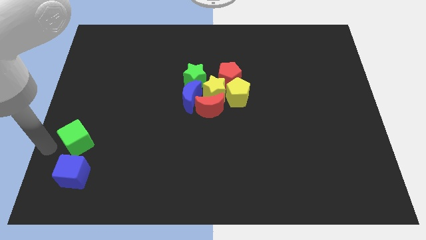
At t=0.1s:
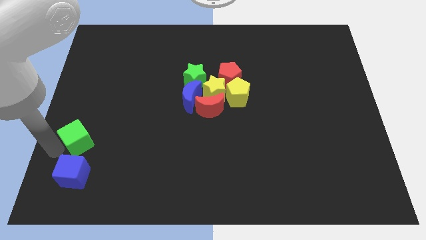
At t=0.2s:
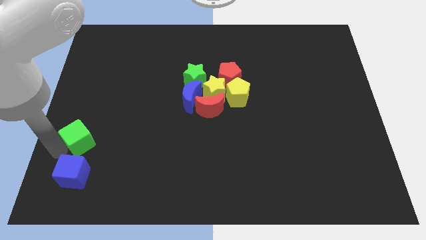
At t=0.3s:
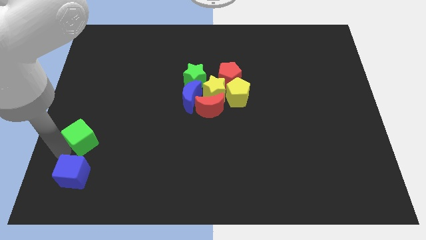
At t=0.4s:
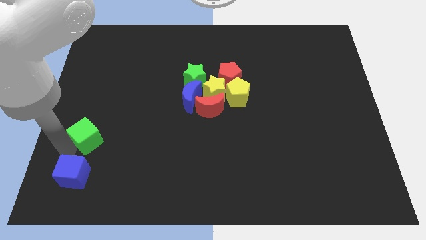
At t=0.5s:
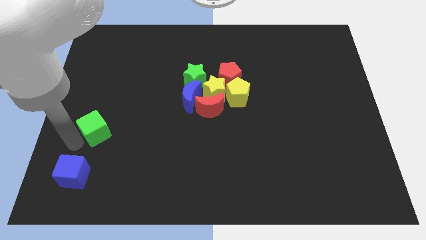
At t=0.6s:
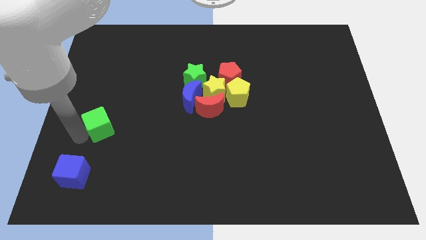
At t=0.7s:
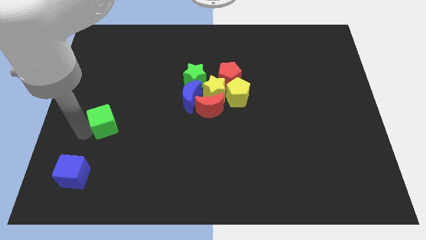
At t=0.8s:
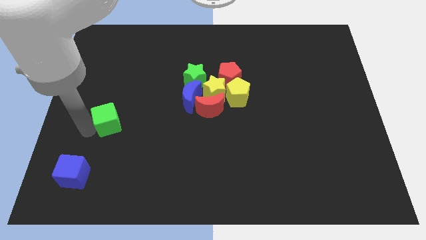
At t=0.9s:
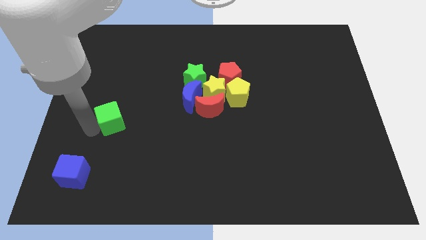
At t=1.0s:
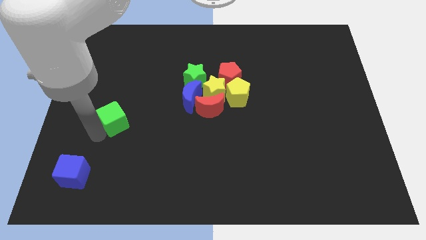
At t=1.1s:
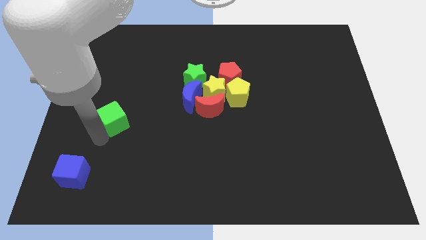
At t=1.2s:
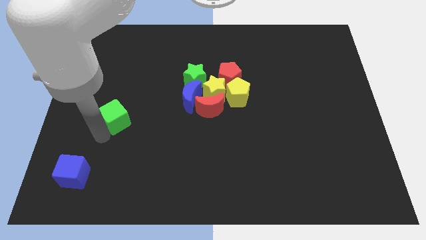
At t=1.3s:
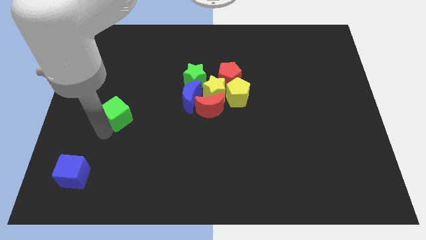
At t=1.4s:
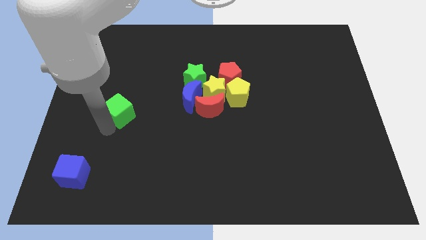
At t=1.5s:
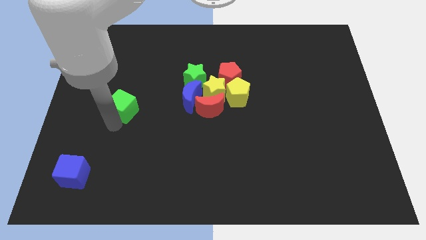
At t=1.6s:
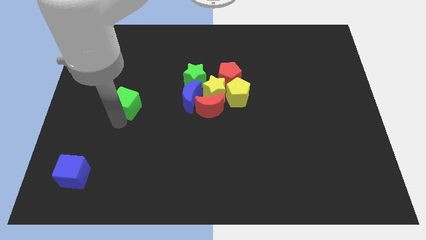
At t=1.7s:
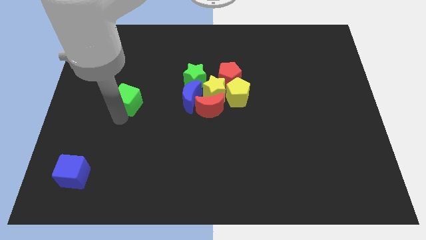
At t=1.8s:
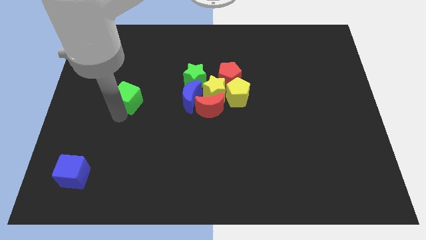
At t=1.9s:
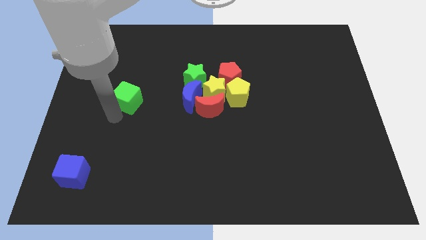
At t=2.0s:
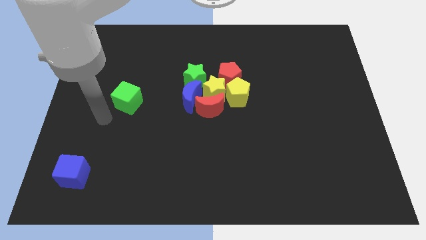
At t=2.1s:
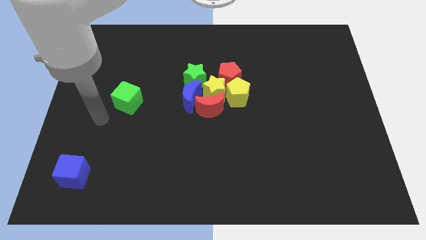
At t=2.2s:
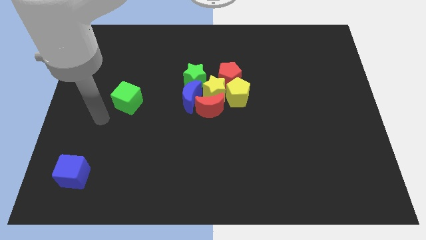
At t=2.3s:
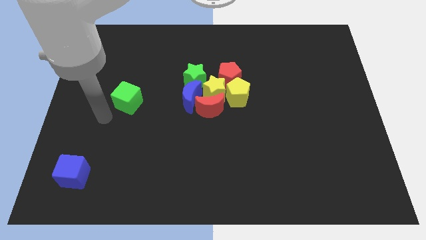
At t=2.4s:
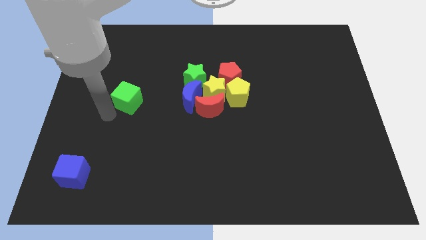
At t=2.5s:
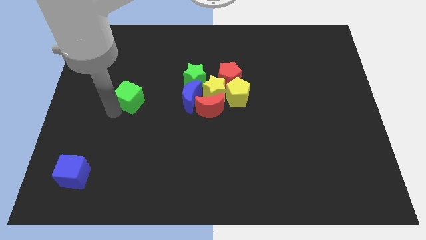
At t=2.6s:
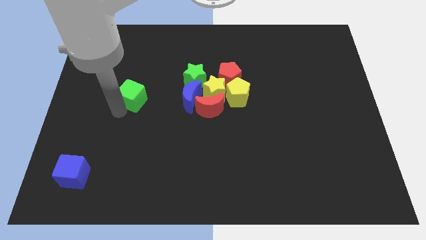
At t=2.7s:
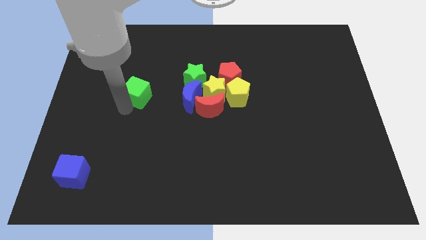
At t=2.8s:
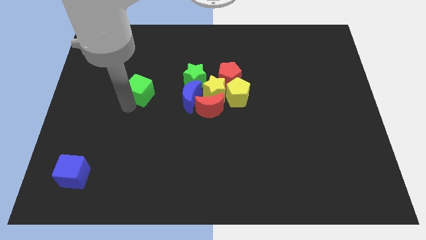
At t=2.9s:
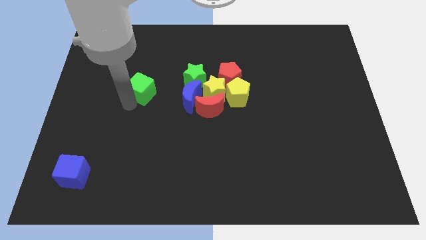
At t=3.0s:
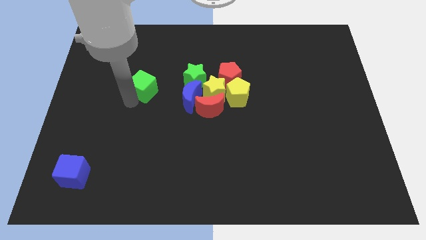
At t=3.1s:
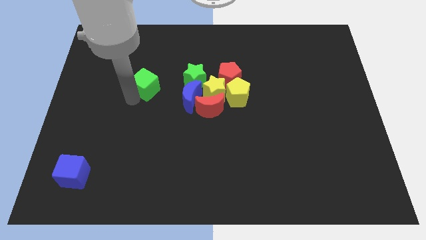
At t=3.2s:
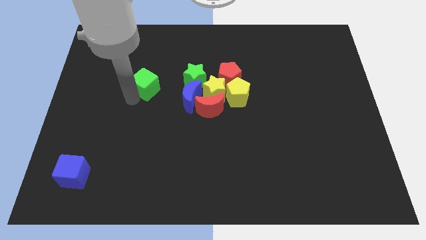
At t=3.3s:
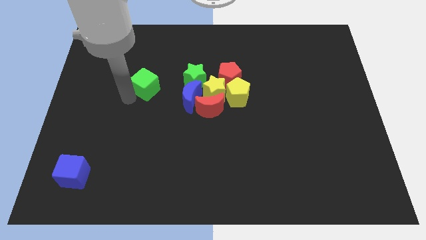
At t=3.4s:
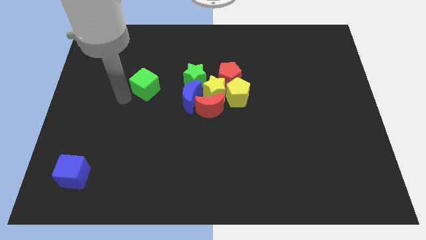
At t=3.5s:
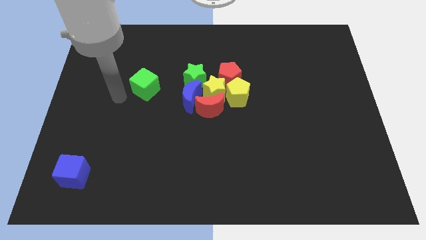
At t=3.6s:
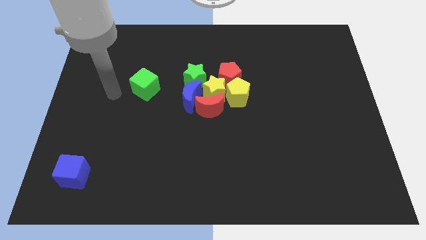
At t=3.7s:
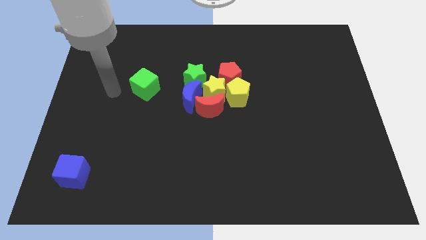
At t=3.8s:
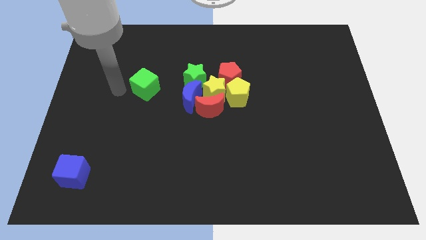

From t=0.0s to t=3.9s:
push green cube towards upwards

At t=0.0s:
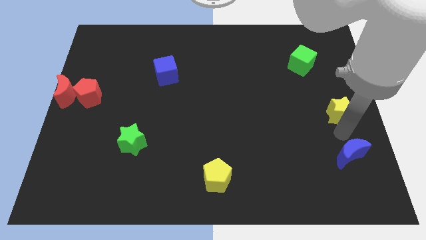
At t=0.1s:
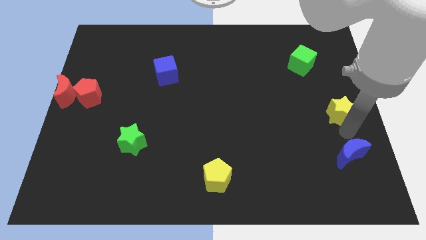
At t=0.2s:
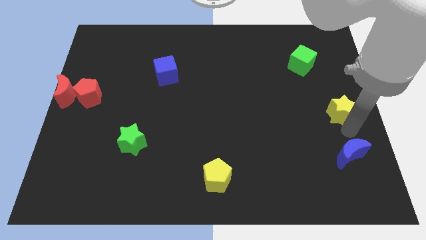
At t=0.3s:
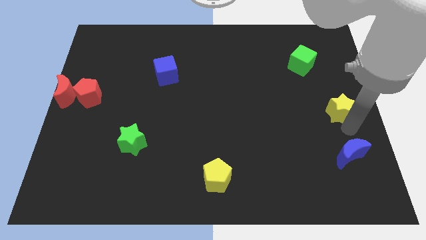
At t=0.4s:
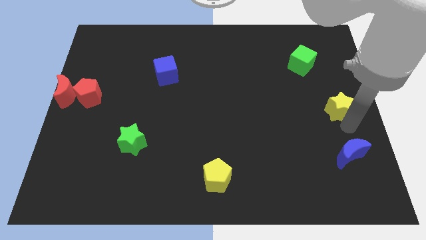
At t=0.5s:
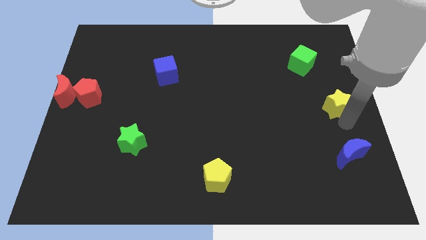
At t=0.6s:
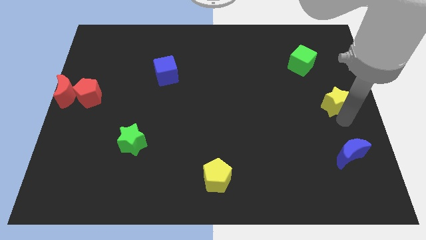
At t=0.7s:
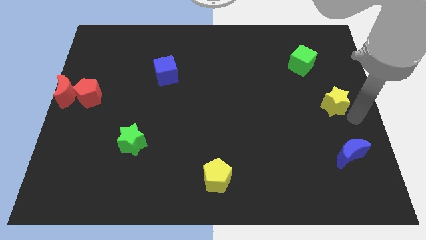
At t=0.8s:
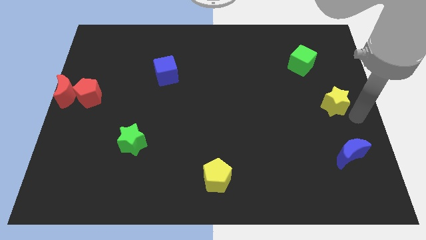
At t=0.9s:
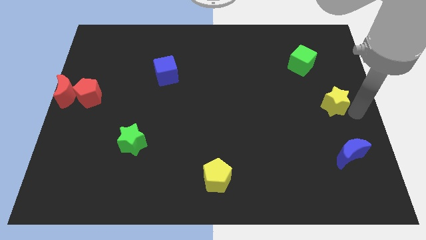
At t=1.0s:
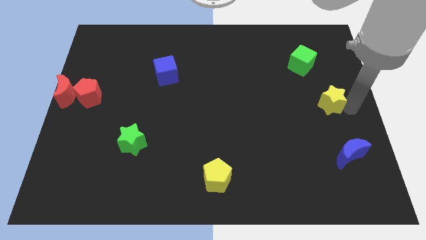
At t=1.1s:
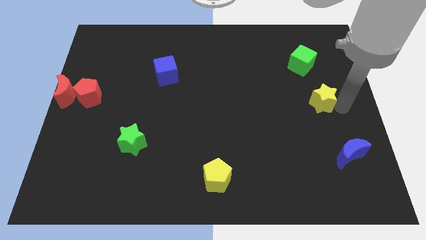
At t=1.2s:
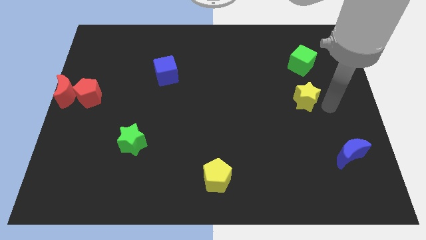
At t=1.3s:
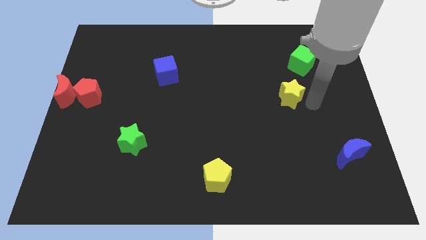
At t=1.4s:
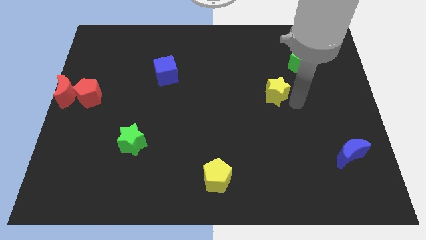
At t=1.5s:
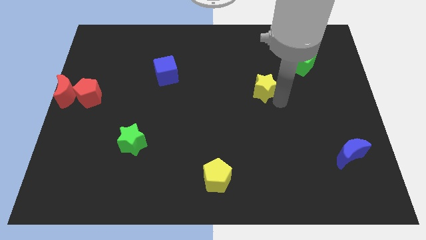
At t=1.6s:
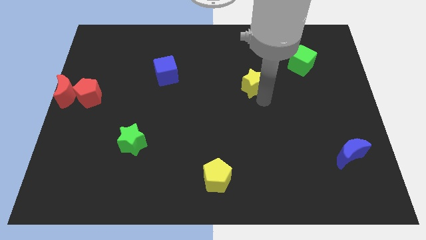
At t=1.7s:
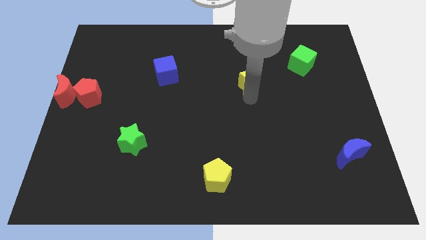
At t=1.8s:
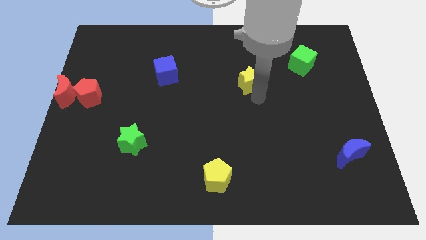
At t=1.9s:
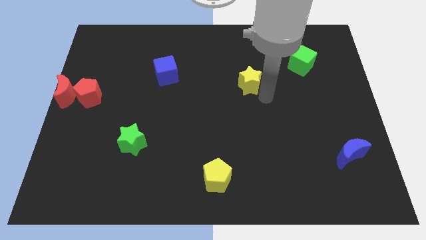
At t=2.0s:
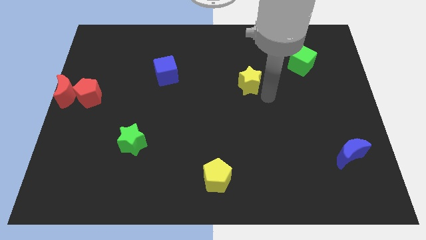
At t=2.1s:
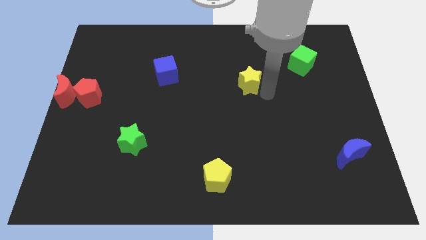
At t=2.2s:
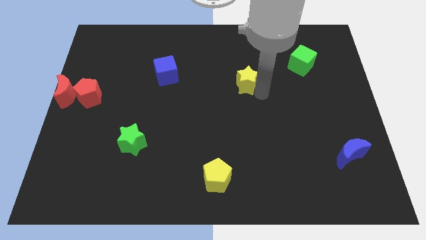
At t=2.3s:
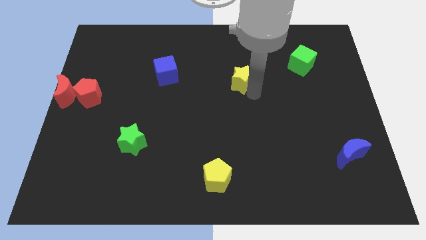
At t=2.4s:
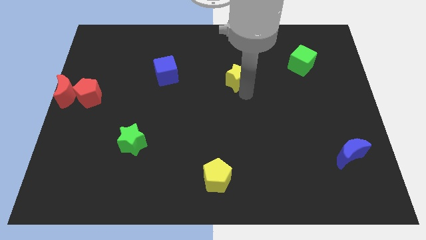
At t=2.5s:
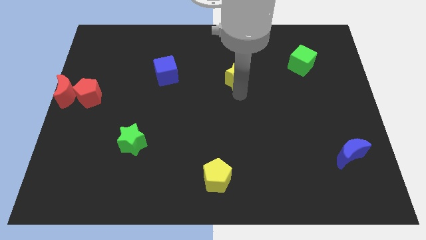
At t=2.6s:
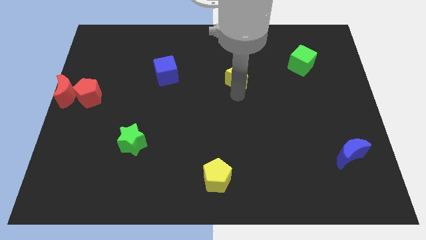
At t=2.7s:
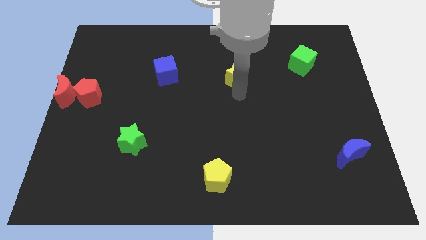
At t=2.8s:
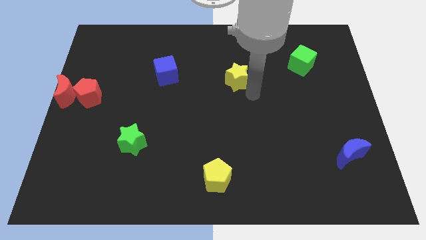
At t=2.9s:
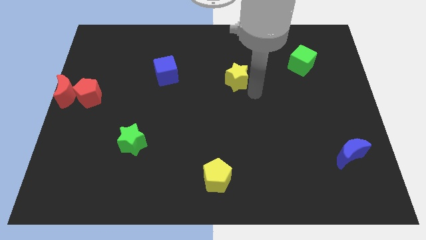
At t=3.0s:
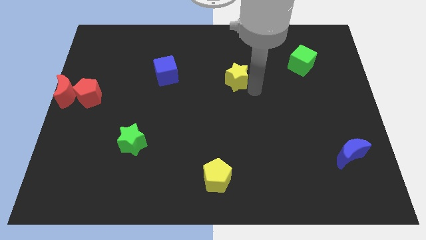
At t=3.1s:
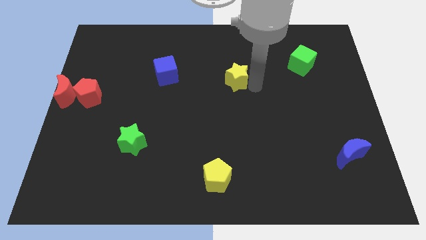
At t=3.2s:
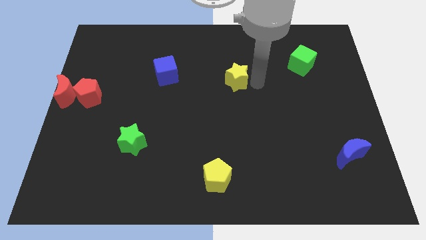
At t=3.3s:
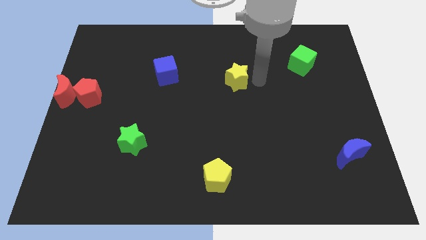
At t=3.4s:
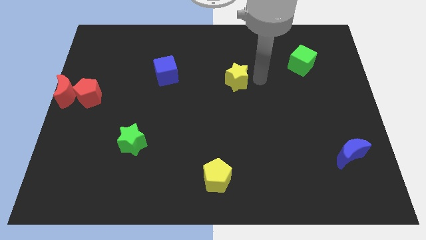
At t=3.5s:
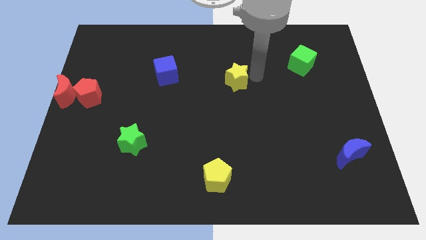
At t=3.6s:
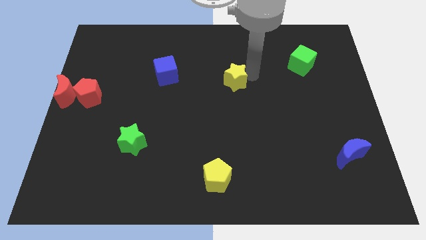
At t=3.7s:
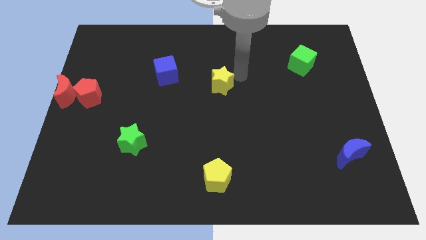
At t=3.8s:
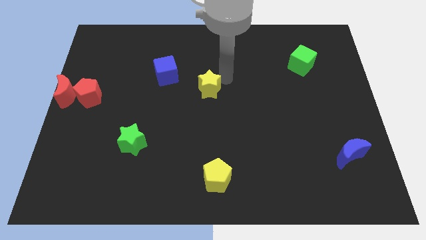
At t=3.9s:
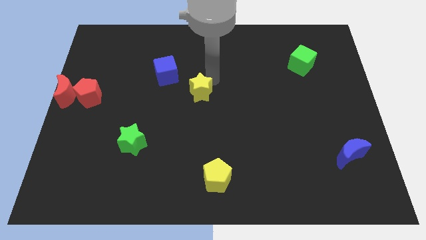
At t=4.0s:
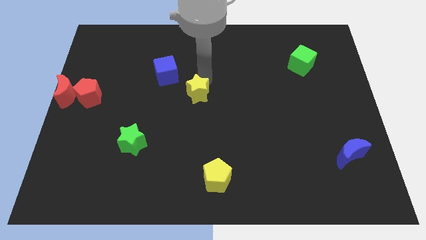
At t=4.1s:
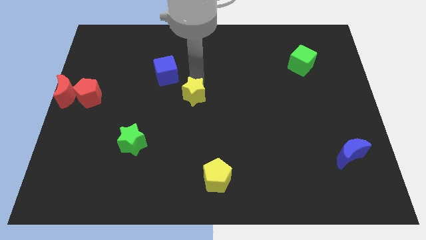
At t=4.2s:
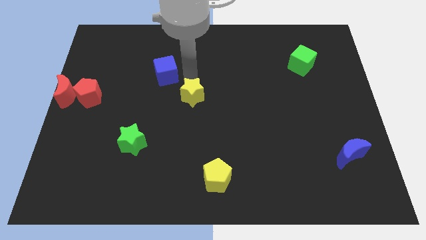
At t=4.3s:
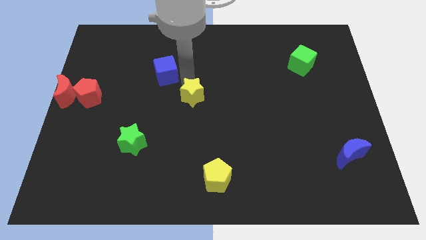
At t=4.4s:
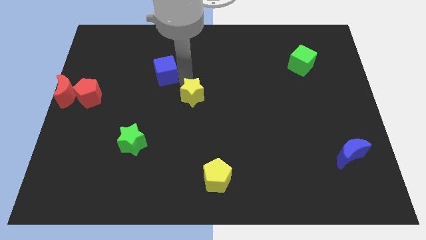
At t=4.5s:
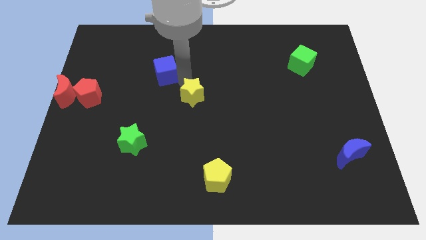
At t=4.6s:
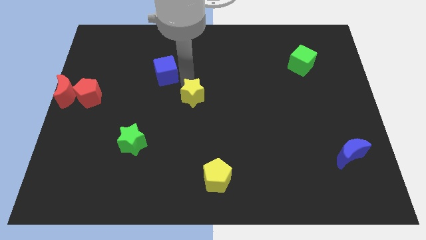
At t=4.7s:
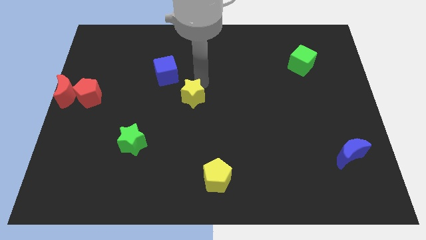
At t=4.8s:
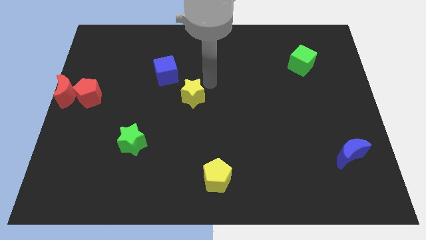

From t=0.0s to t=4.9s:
move yellow star to the centre of the board

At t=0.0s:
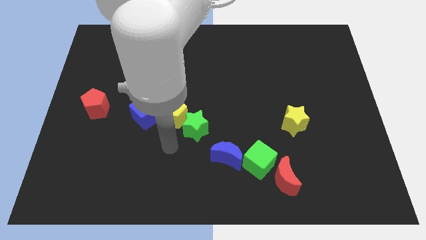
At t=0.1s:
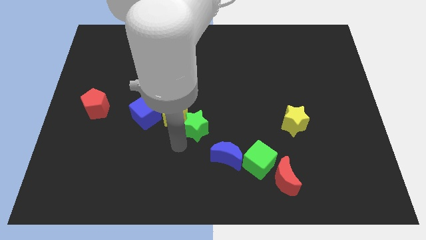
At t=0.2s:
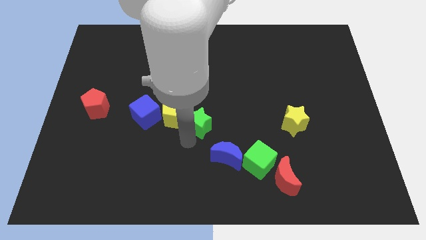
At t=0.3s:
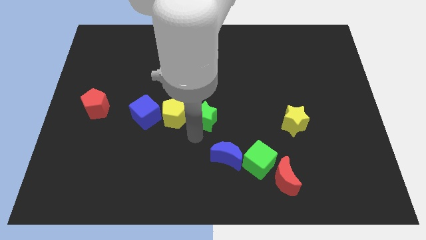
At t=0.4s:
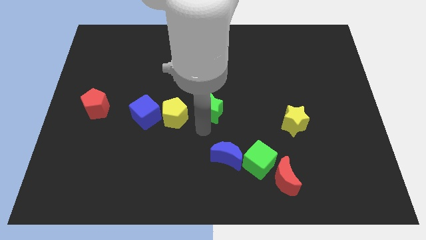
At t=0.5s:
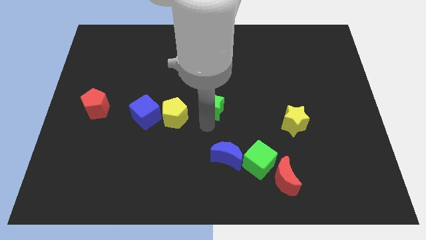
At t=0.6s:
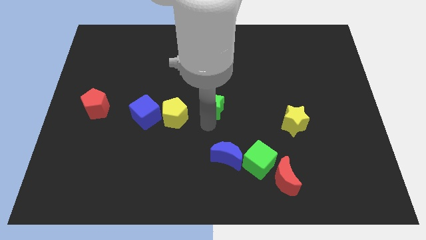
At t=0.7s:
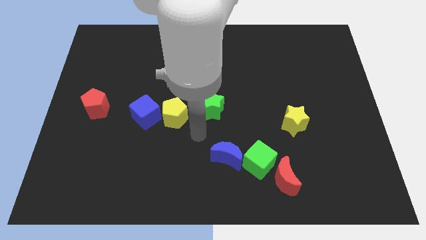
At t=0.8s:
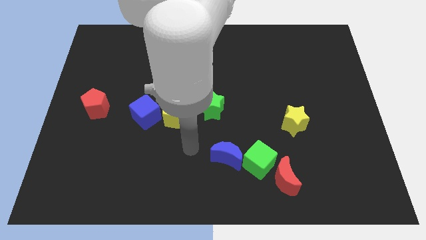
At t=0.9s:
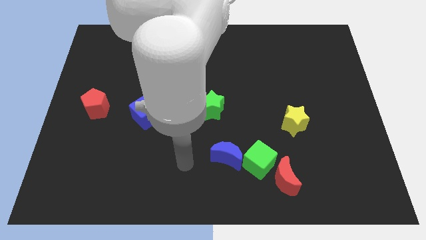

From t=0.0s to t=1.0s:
push the green star upwards
